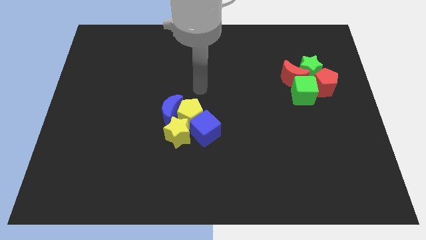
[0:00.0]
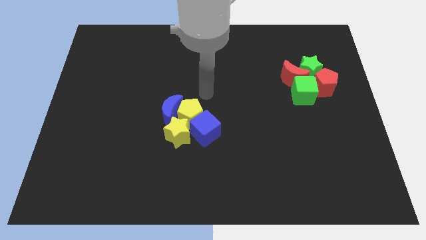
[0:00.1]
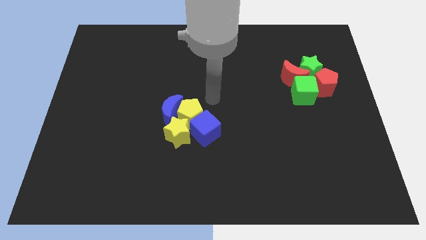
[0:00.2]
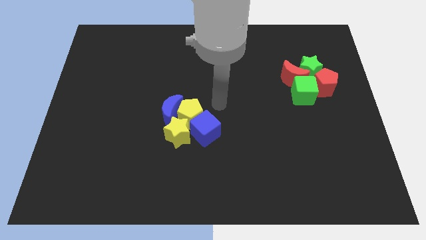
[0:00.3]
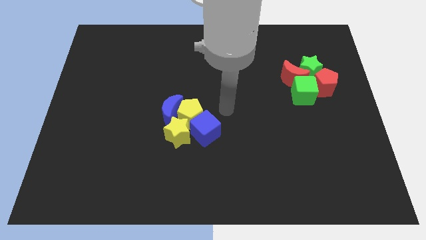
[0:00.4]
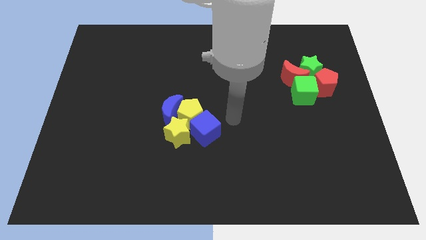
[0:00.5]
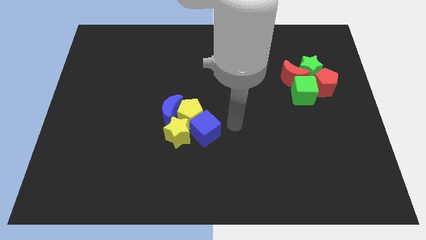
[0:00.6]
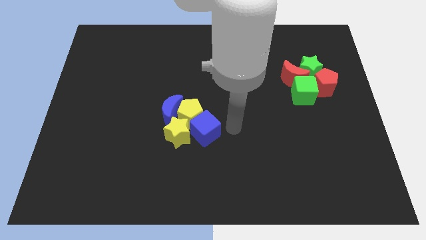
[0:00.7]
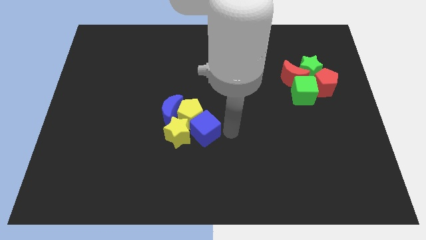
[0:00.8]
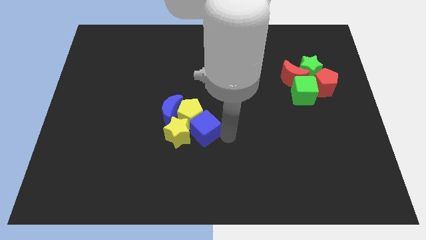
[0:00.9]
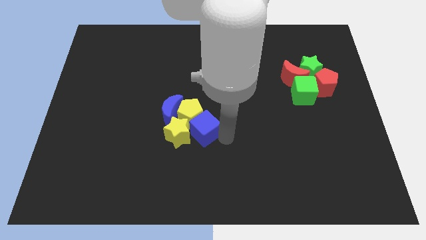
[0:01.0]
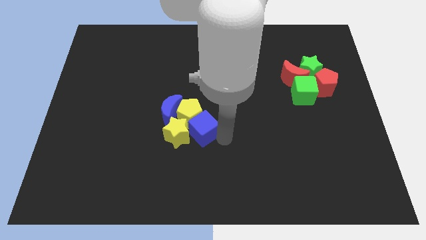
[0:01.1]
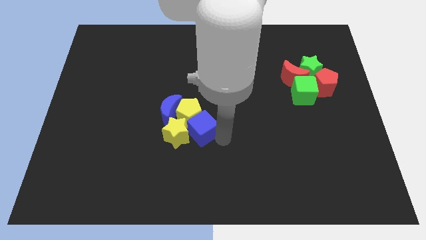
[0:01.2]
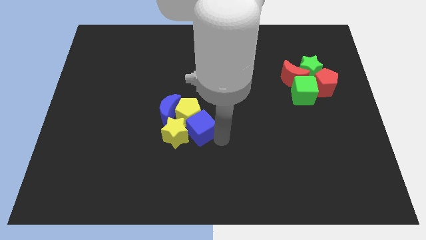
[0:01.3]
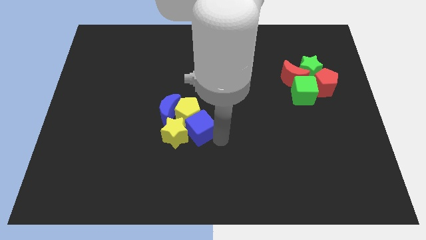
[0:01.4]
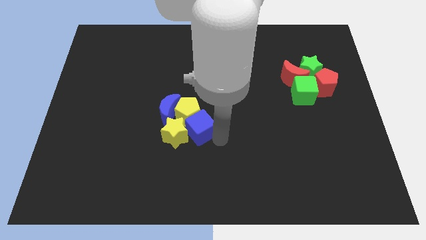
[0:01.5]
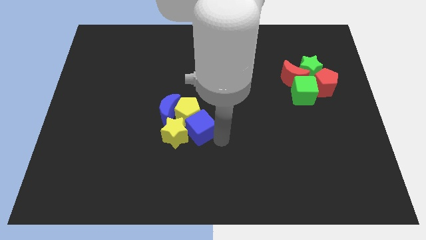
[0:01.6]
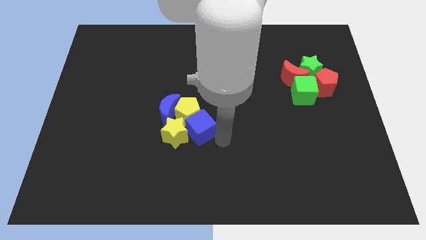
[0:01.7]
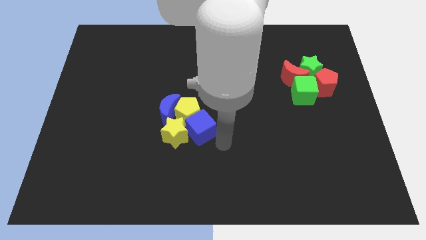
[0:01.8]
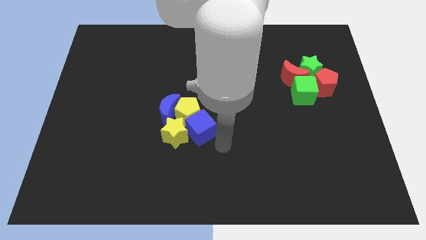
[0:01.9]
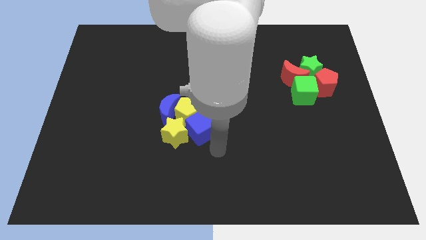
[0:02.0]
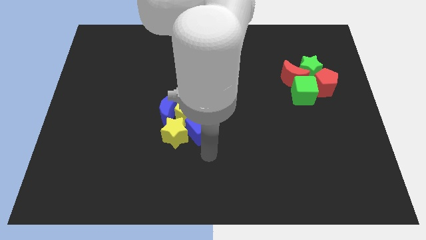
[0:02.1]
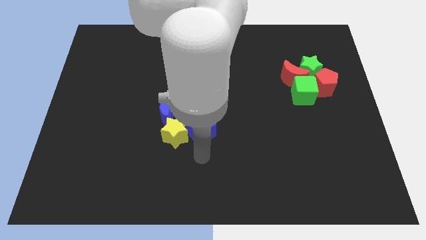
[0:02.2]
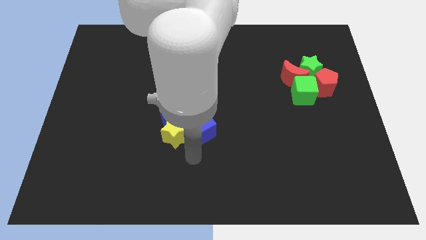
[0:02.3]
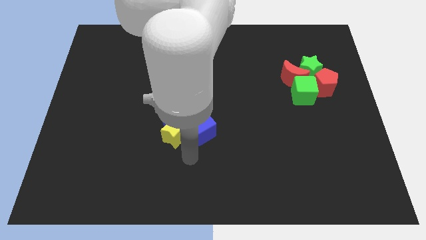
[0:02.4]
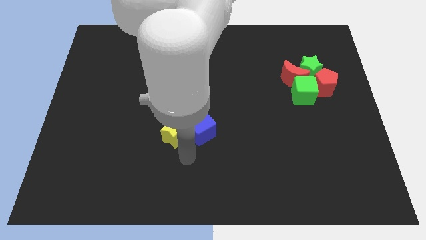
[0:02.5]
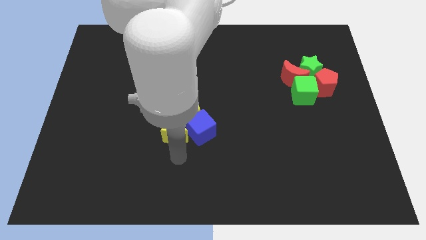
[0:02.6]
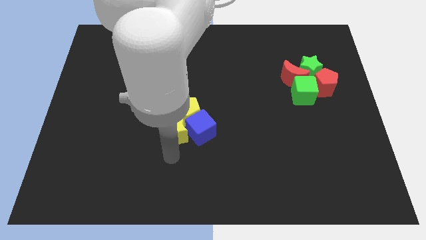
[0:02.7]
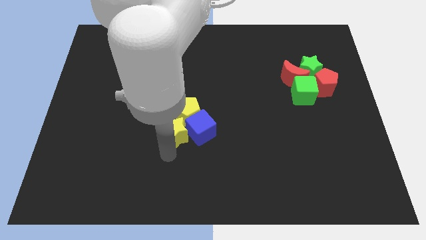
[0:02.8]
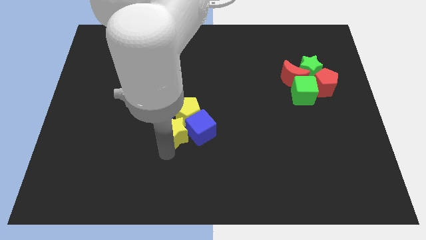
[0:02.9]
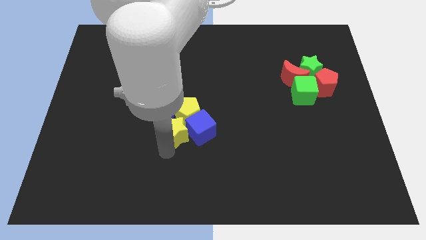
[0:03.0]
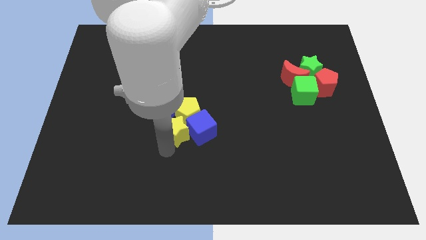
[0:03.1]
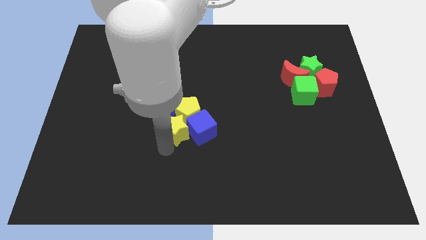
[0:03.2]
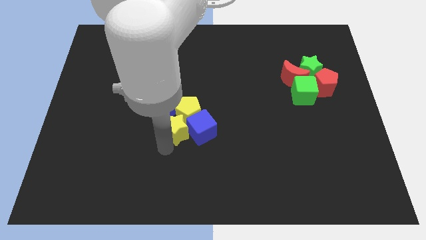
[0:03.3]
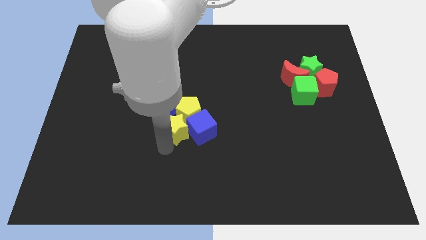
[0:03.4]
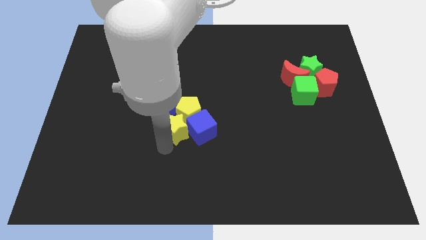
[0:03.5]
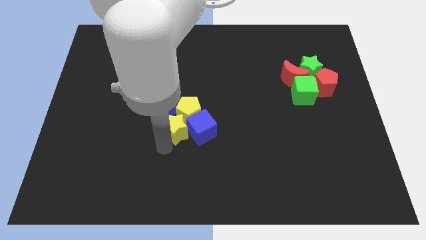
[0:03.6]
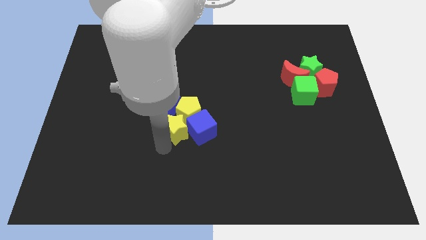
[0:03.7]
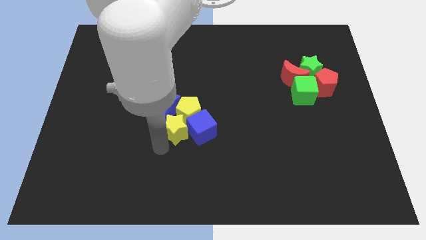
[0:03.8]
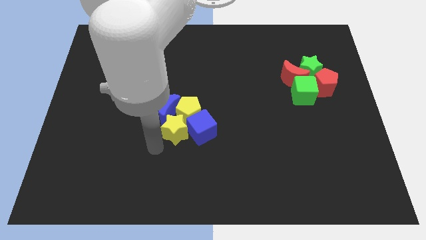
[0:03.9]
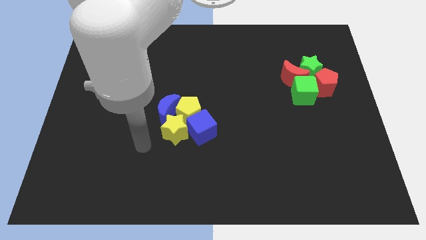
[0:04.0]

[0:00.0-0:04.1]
move your arm to the left of yellow star

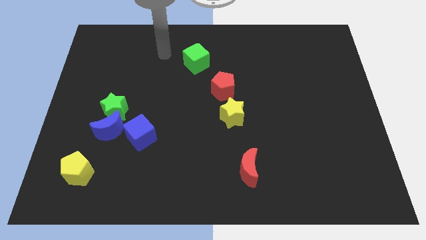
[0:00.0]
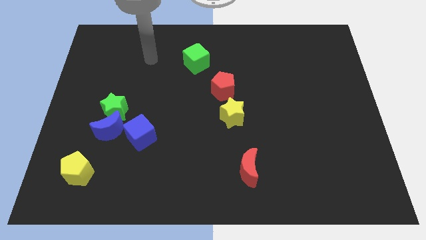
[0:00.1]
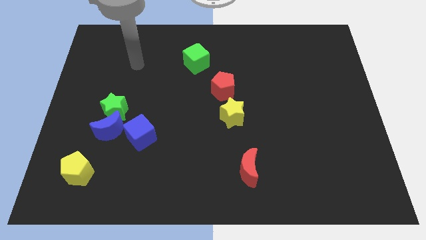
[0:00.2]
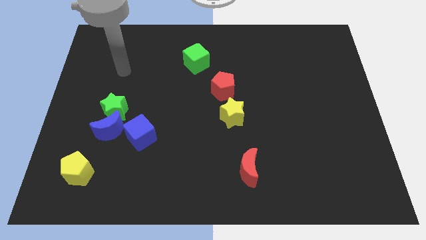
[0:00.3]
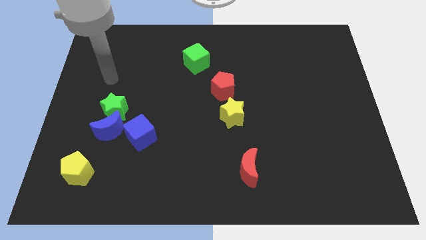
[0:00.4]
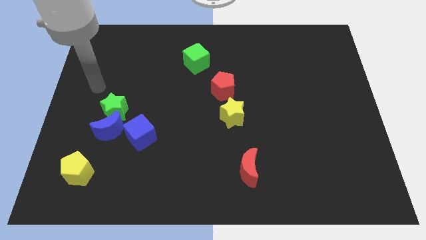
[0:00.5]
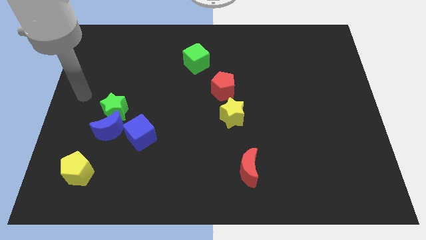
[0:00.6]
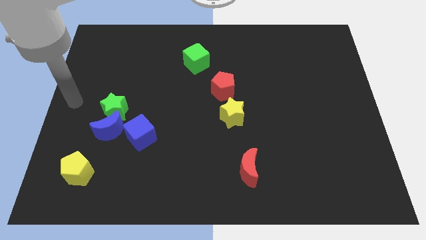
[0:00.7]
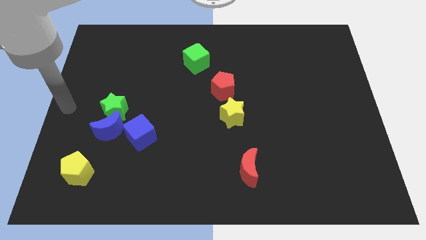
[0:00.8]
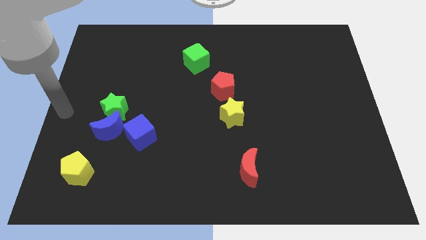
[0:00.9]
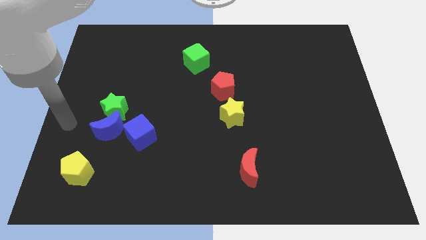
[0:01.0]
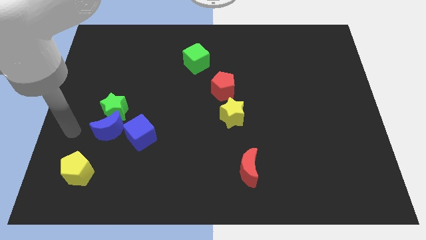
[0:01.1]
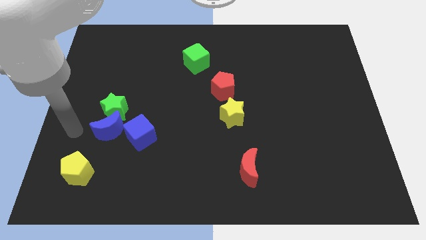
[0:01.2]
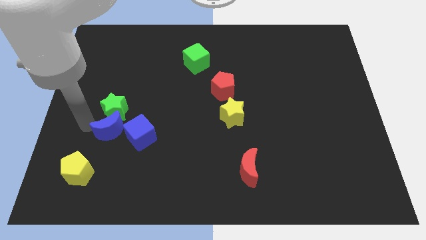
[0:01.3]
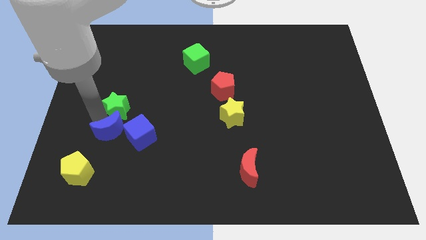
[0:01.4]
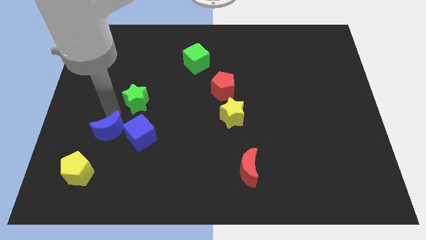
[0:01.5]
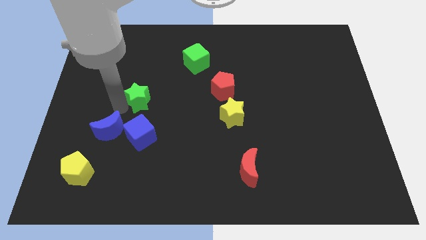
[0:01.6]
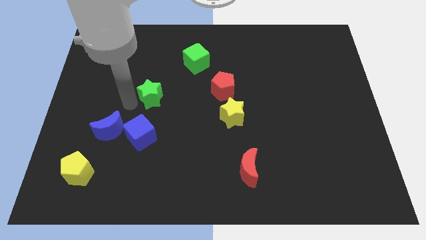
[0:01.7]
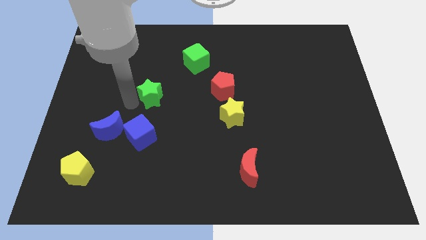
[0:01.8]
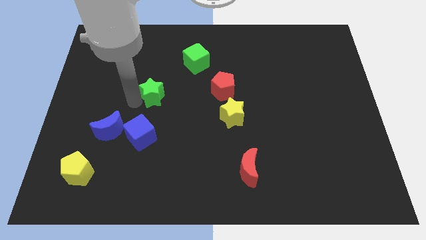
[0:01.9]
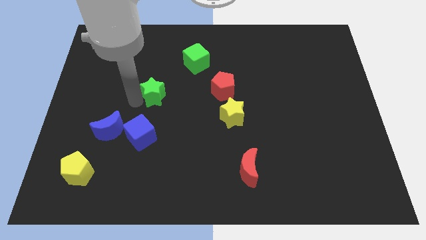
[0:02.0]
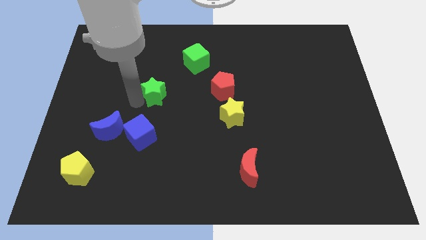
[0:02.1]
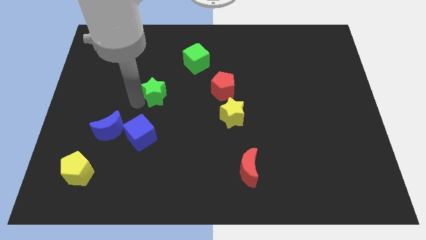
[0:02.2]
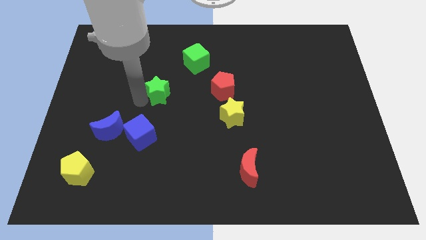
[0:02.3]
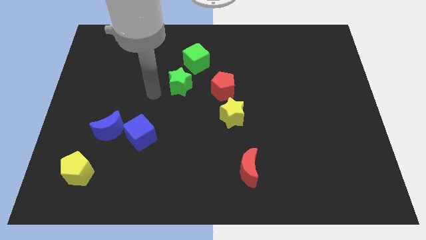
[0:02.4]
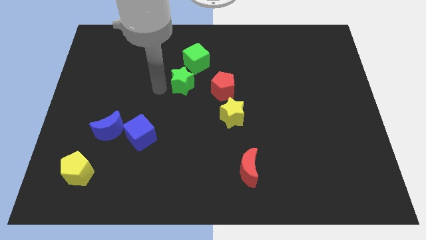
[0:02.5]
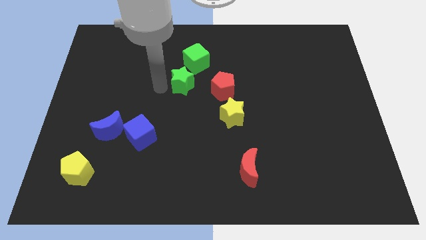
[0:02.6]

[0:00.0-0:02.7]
push green star towards green cube

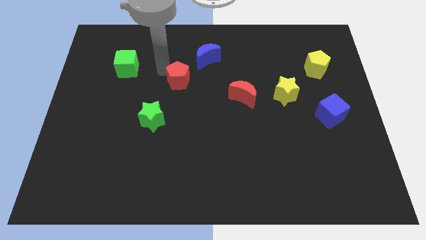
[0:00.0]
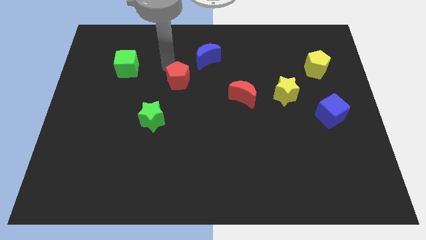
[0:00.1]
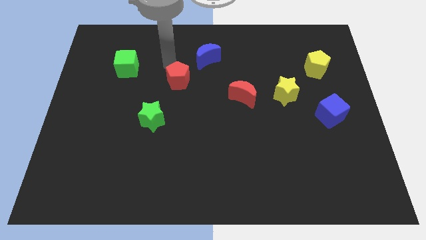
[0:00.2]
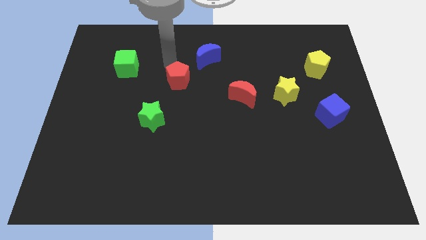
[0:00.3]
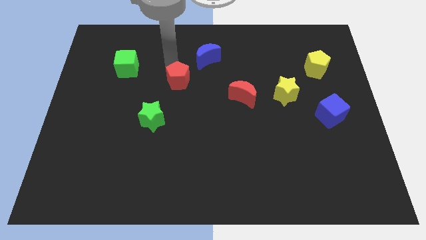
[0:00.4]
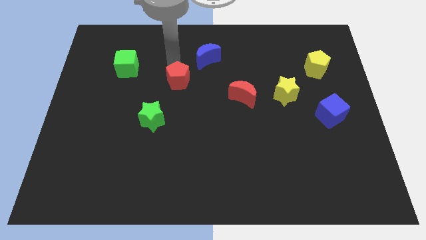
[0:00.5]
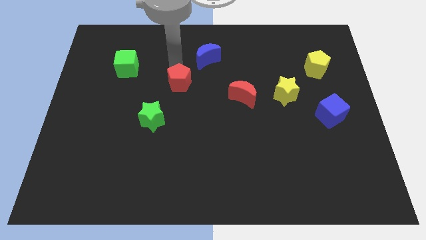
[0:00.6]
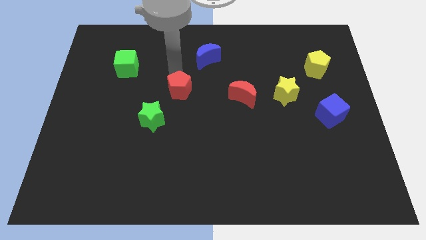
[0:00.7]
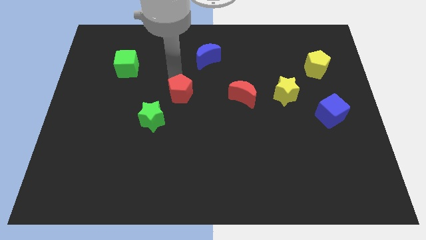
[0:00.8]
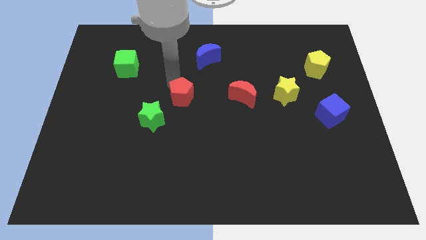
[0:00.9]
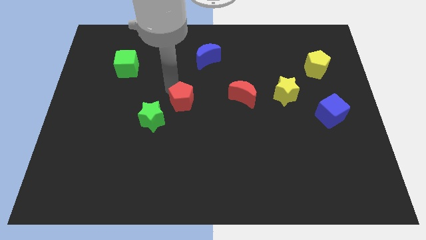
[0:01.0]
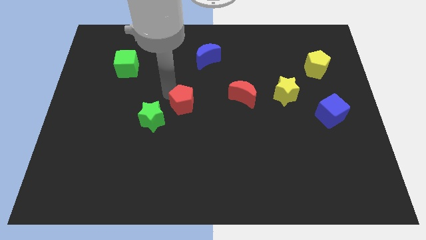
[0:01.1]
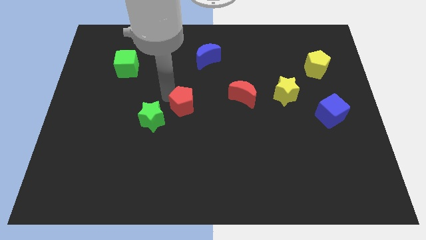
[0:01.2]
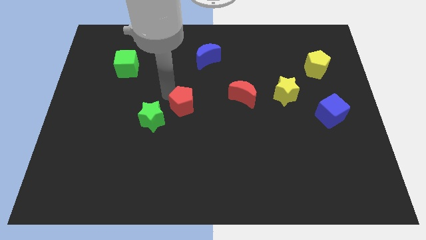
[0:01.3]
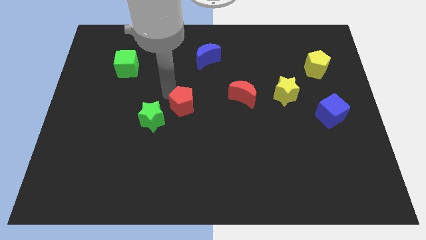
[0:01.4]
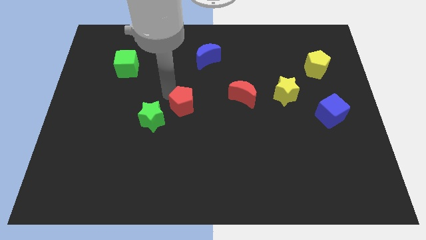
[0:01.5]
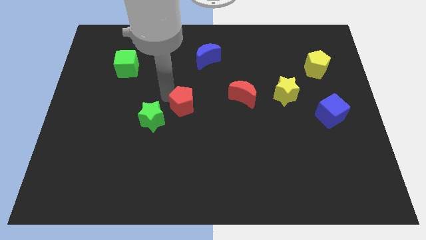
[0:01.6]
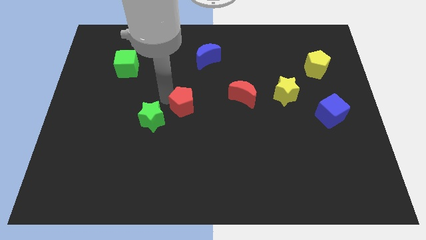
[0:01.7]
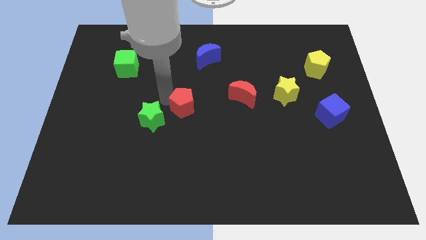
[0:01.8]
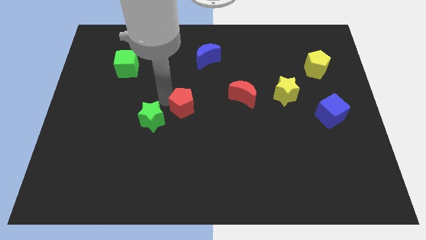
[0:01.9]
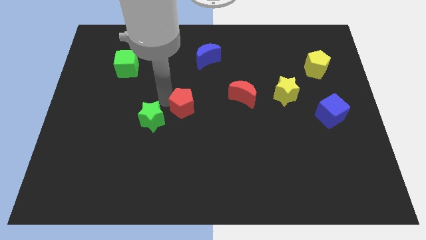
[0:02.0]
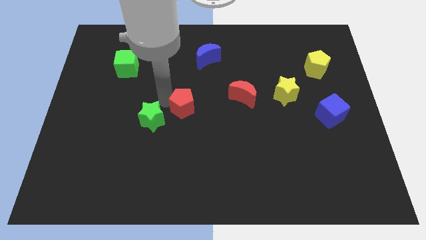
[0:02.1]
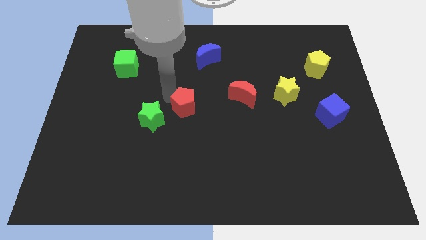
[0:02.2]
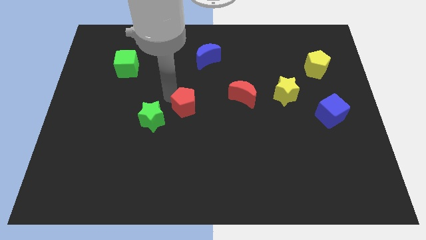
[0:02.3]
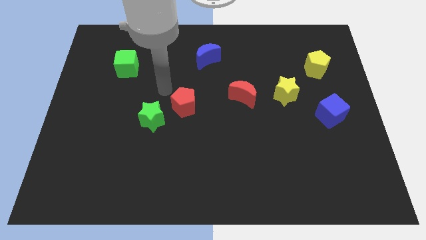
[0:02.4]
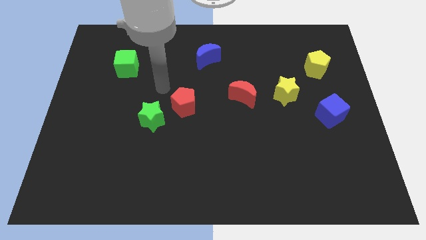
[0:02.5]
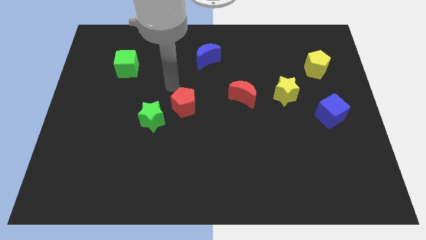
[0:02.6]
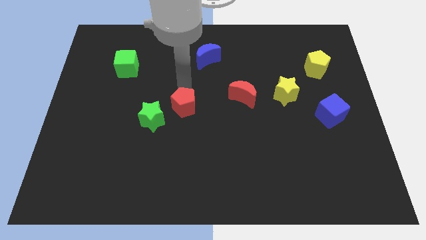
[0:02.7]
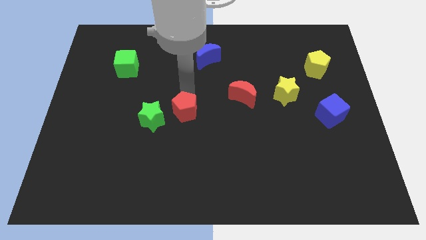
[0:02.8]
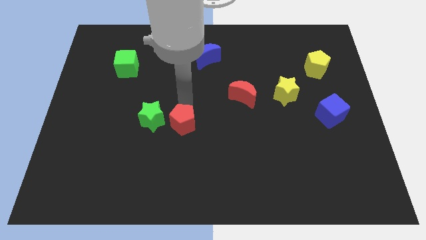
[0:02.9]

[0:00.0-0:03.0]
place the red pentagon right to the green star
